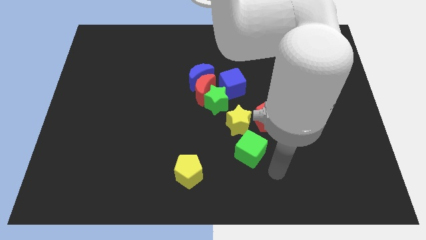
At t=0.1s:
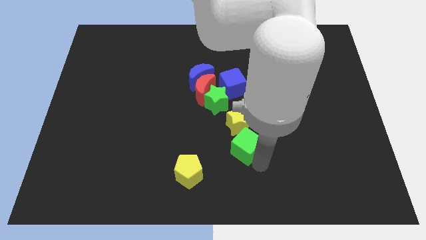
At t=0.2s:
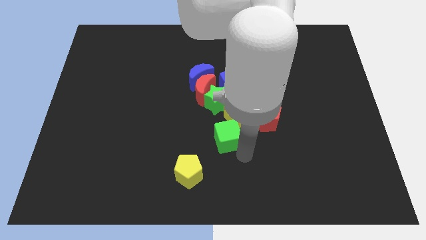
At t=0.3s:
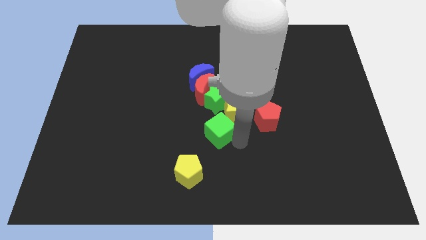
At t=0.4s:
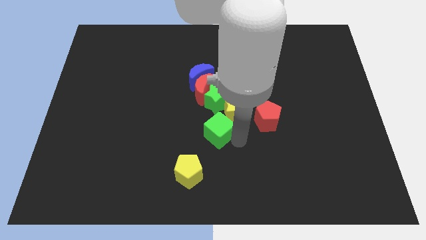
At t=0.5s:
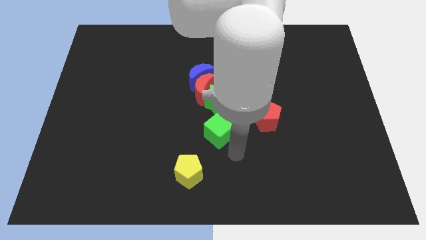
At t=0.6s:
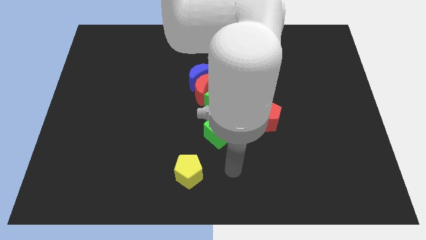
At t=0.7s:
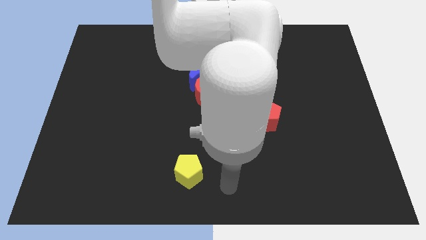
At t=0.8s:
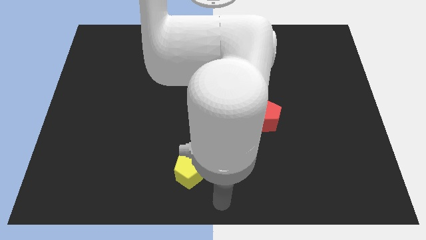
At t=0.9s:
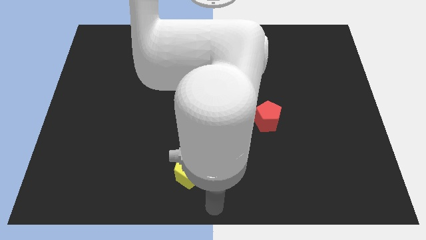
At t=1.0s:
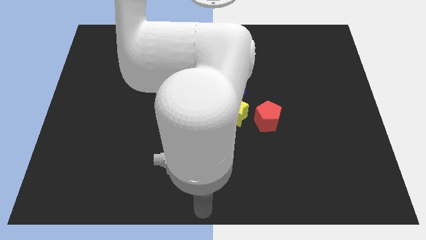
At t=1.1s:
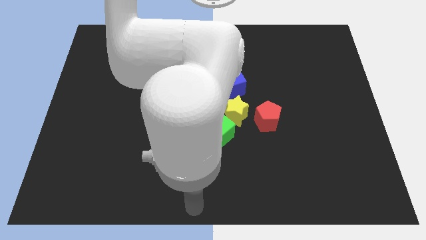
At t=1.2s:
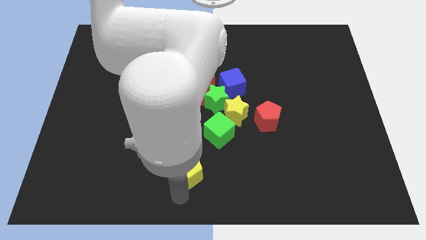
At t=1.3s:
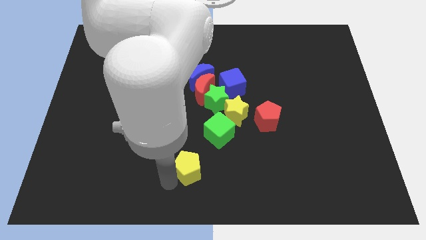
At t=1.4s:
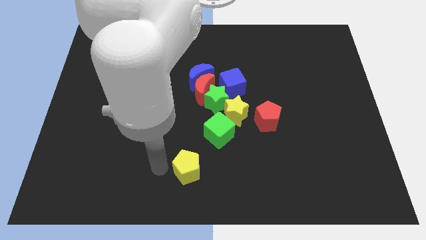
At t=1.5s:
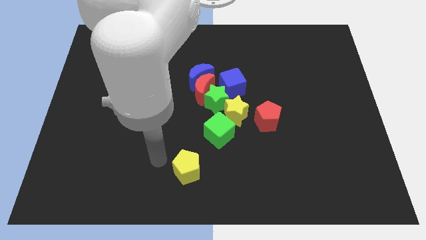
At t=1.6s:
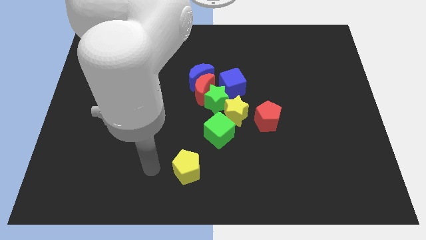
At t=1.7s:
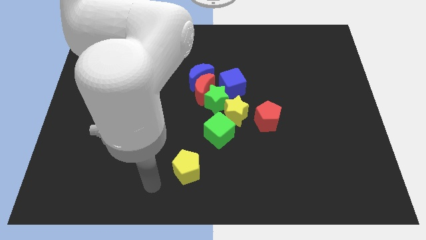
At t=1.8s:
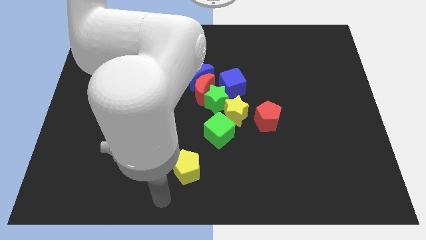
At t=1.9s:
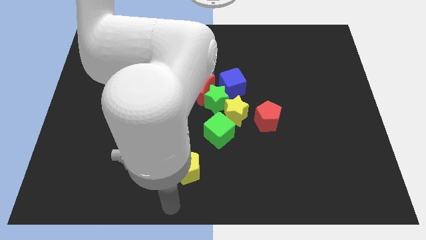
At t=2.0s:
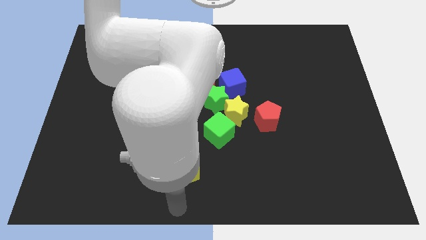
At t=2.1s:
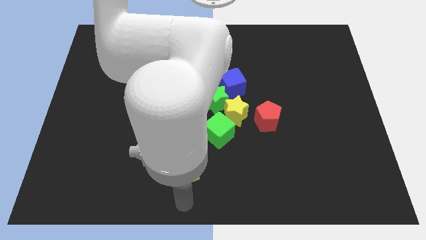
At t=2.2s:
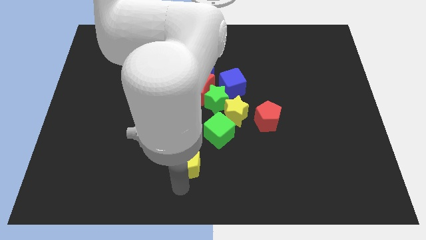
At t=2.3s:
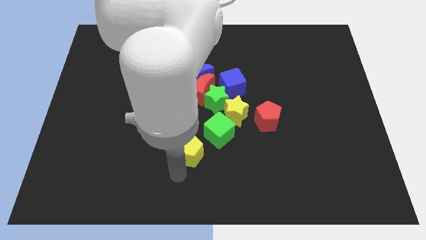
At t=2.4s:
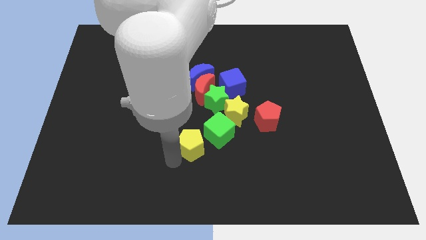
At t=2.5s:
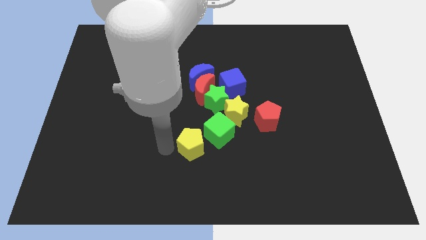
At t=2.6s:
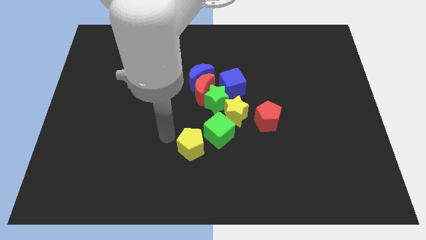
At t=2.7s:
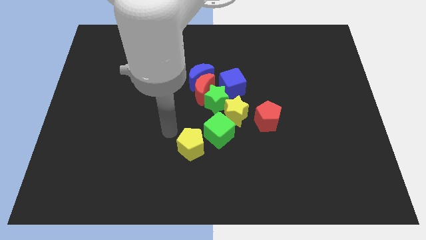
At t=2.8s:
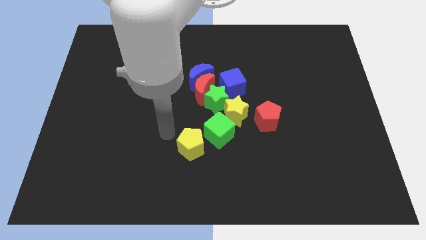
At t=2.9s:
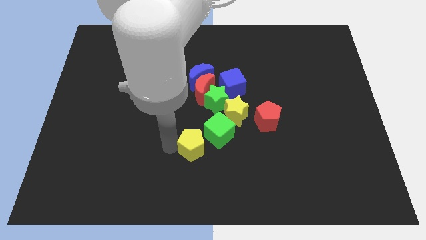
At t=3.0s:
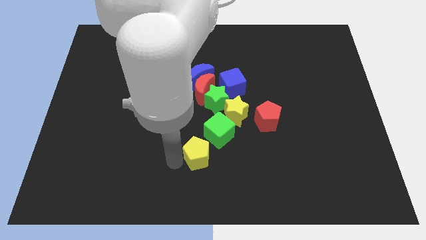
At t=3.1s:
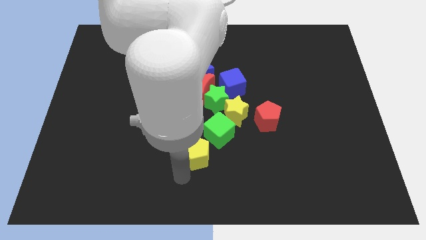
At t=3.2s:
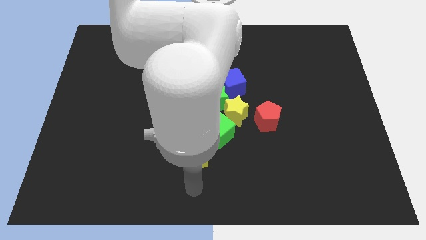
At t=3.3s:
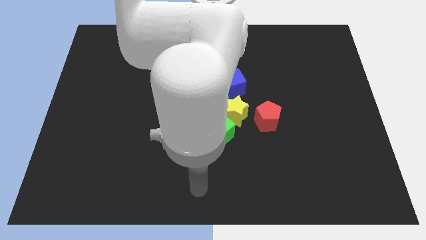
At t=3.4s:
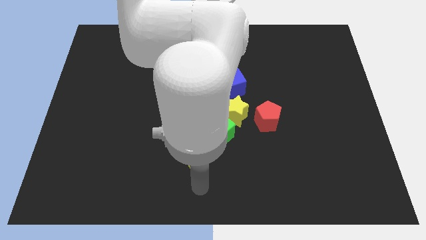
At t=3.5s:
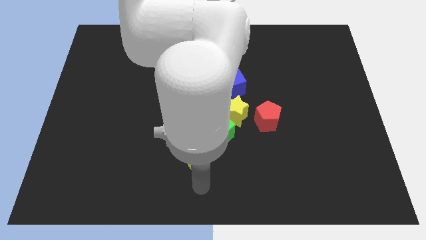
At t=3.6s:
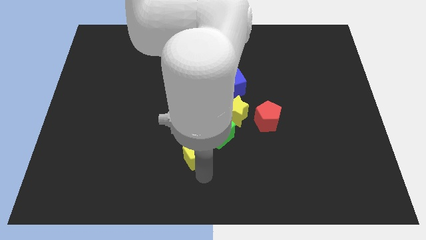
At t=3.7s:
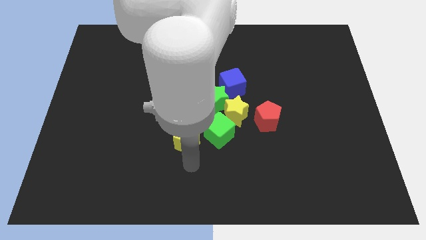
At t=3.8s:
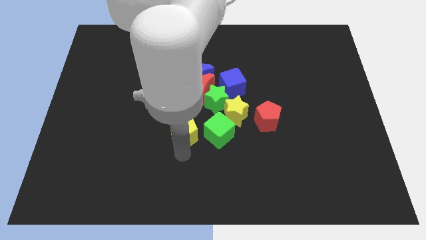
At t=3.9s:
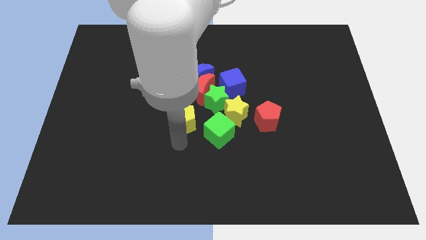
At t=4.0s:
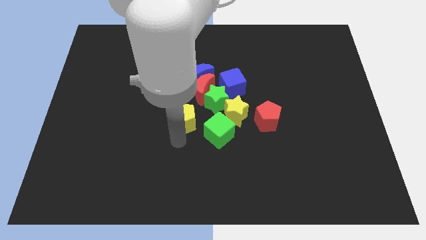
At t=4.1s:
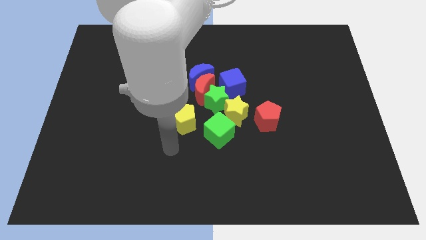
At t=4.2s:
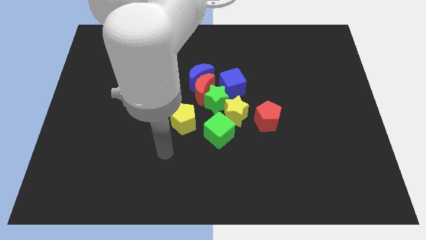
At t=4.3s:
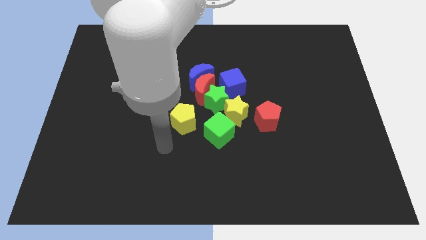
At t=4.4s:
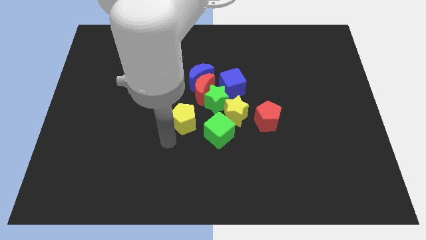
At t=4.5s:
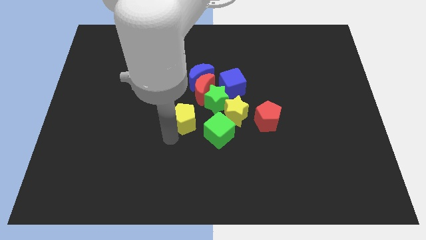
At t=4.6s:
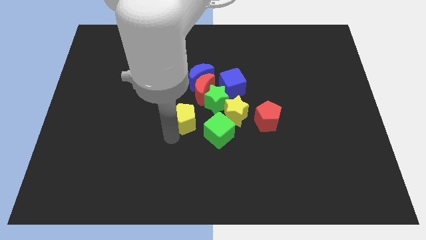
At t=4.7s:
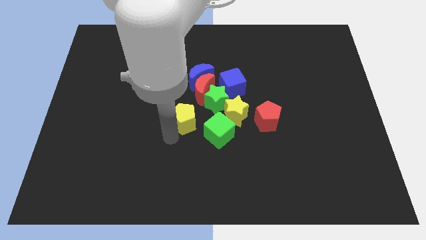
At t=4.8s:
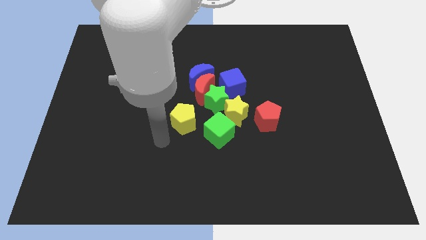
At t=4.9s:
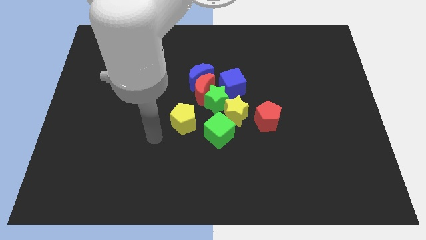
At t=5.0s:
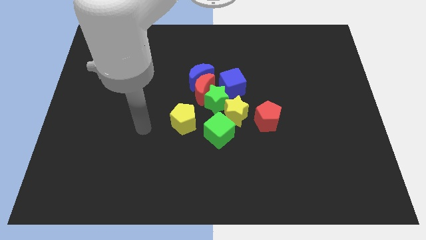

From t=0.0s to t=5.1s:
move green cube yellow pentagon into the group of blocks

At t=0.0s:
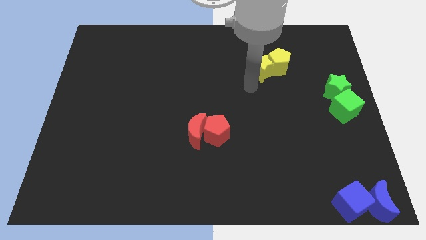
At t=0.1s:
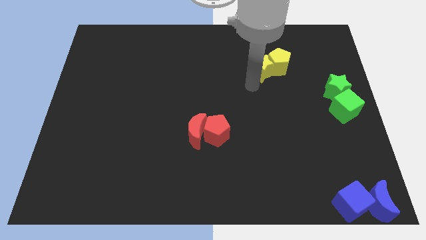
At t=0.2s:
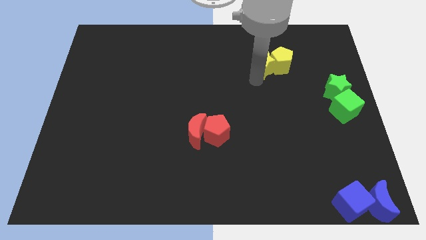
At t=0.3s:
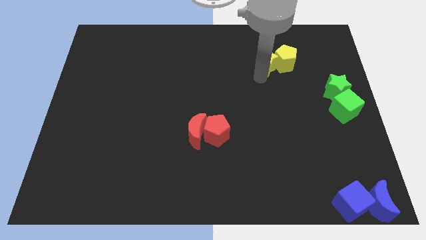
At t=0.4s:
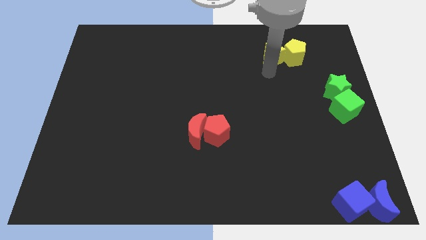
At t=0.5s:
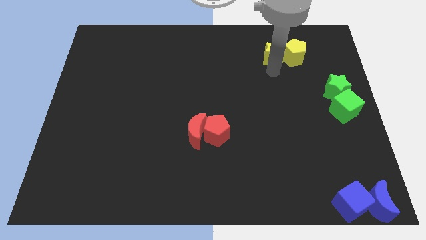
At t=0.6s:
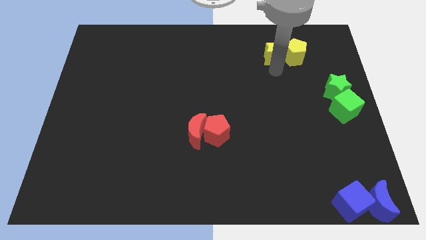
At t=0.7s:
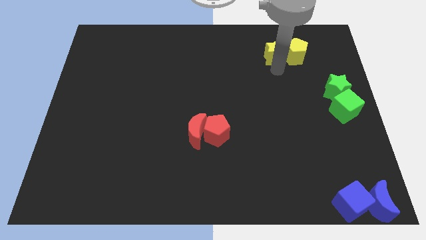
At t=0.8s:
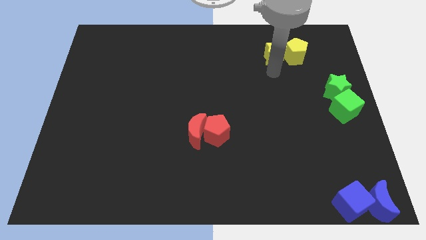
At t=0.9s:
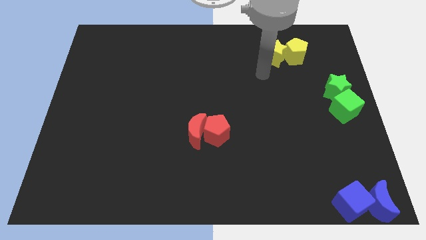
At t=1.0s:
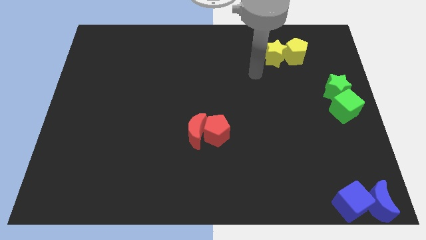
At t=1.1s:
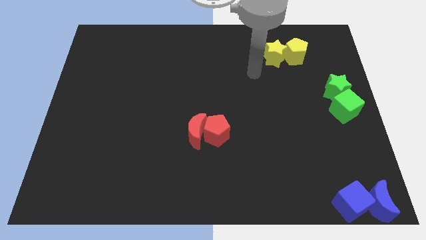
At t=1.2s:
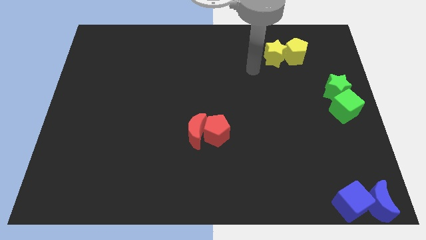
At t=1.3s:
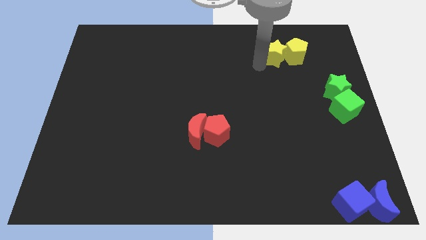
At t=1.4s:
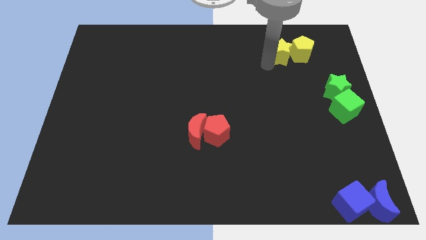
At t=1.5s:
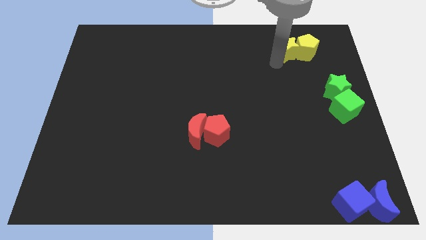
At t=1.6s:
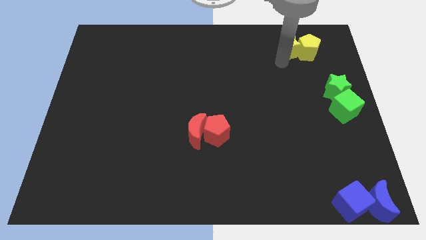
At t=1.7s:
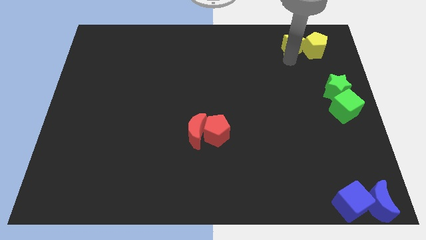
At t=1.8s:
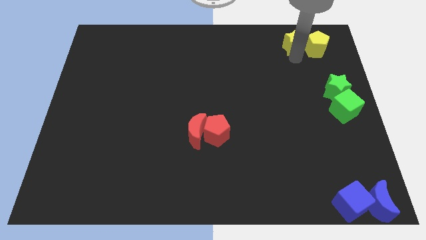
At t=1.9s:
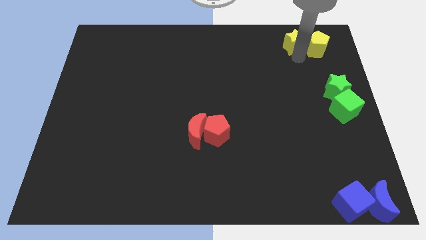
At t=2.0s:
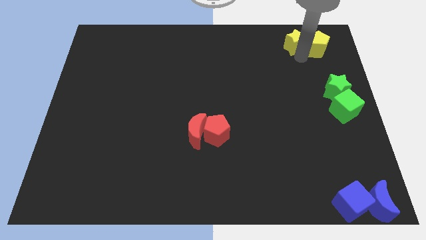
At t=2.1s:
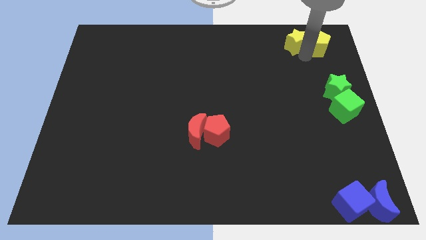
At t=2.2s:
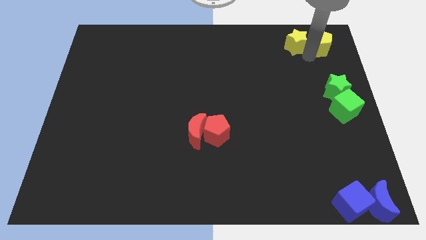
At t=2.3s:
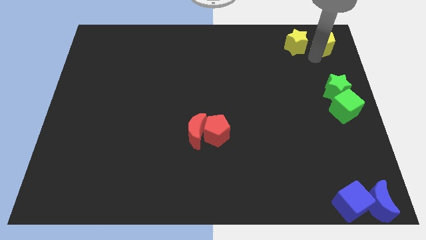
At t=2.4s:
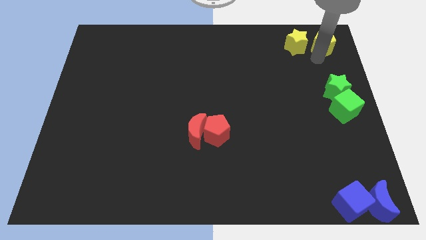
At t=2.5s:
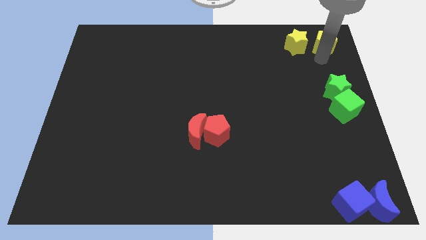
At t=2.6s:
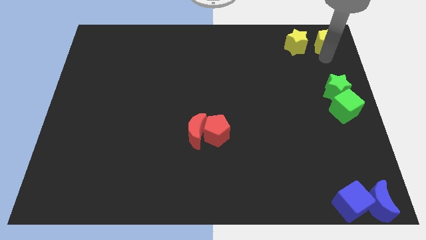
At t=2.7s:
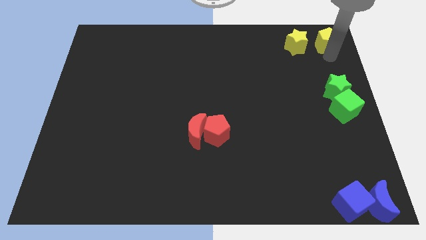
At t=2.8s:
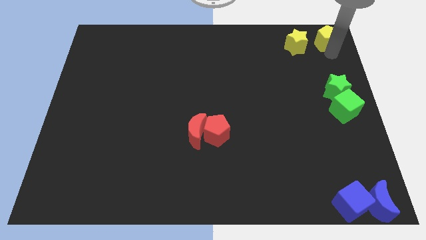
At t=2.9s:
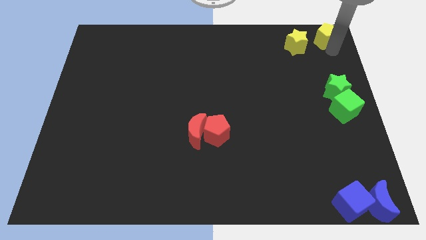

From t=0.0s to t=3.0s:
push yellow pentagon above green star

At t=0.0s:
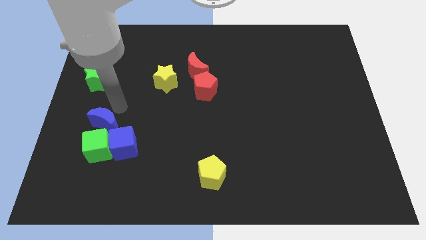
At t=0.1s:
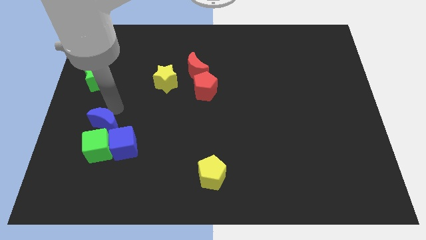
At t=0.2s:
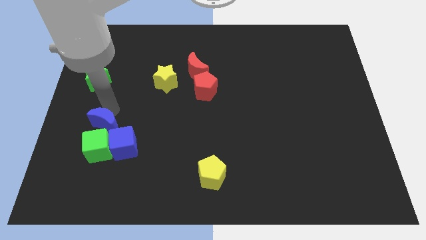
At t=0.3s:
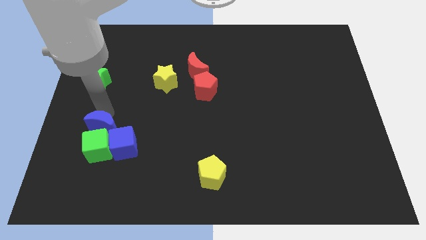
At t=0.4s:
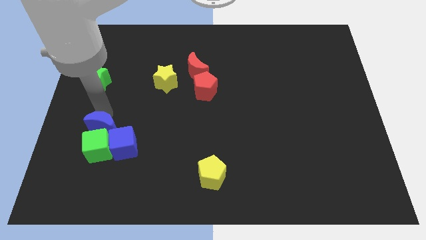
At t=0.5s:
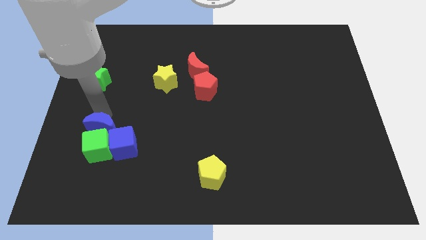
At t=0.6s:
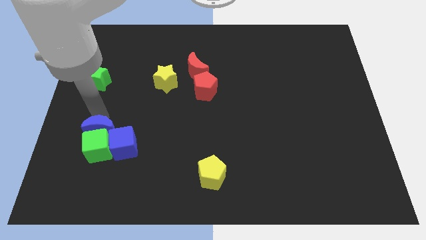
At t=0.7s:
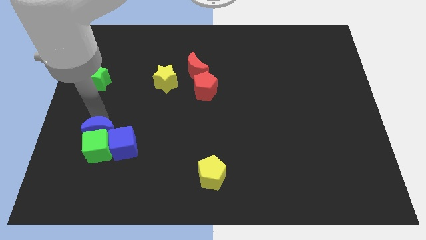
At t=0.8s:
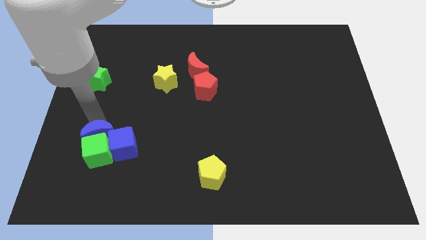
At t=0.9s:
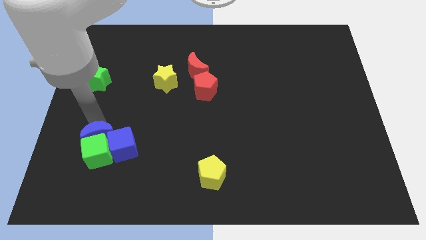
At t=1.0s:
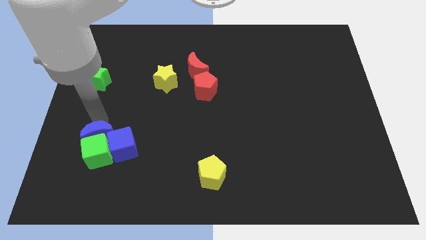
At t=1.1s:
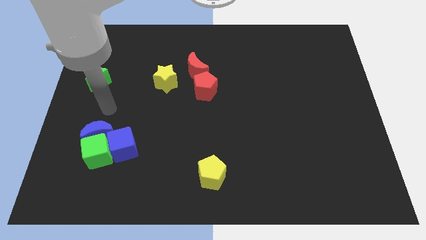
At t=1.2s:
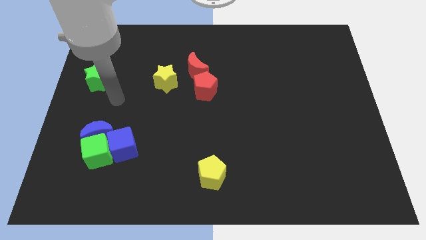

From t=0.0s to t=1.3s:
push the blue moon into green cube
